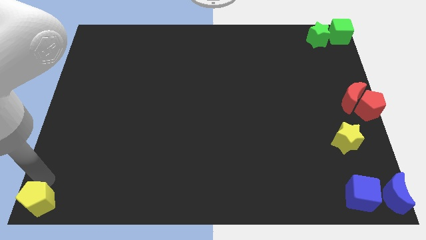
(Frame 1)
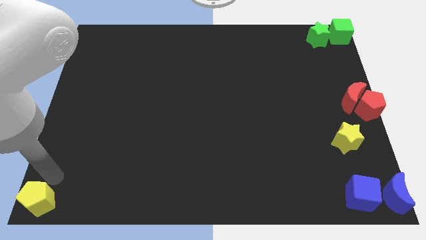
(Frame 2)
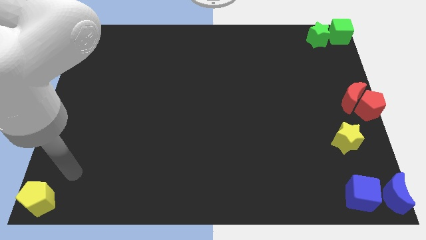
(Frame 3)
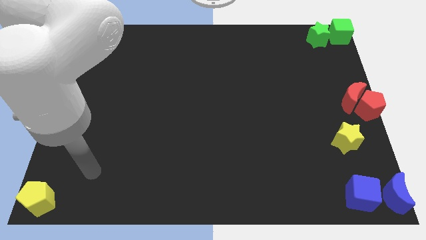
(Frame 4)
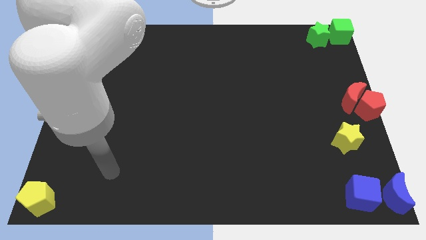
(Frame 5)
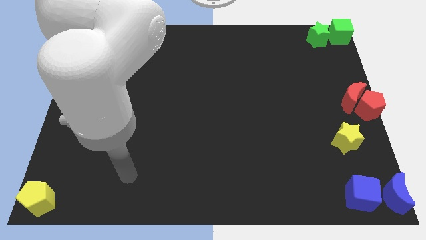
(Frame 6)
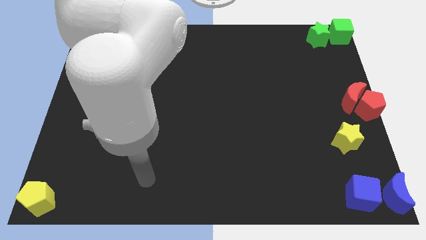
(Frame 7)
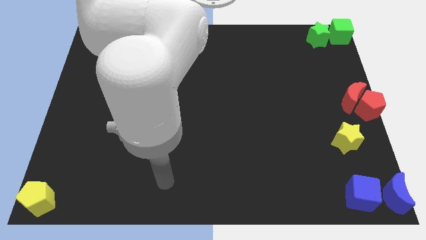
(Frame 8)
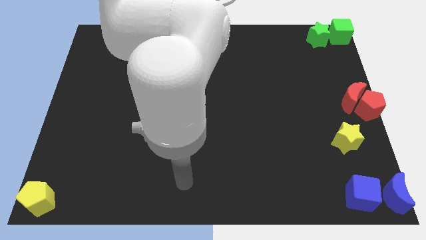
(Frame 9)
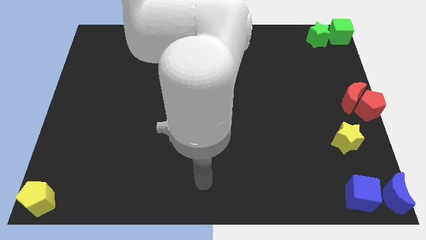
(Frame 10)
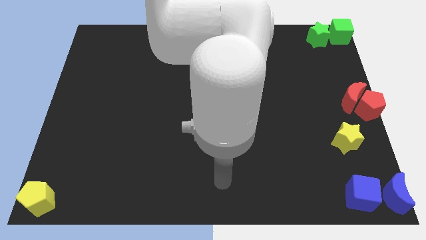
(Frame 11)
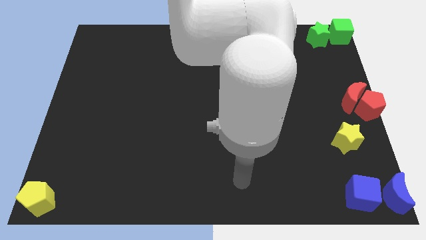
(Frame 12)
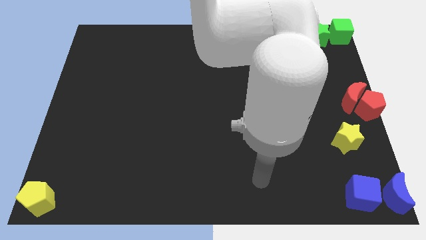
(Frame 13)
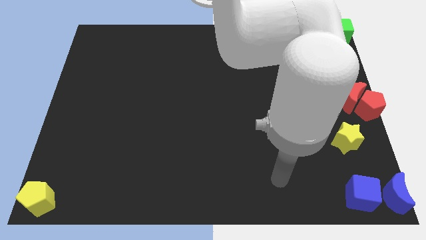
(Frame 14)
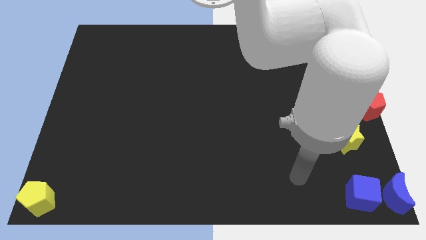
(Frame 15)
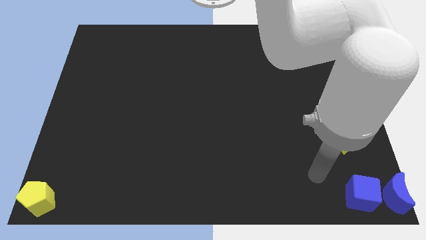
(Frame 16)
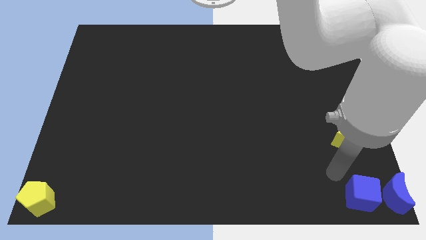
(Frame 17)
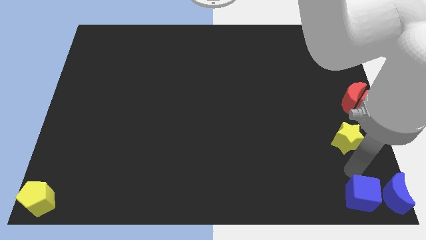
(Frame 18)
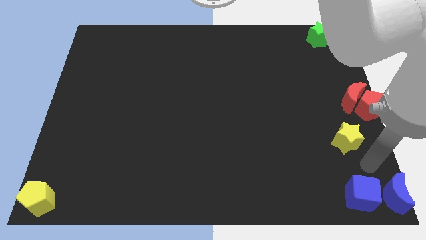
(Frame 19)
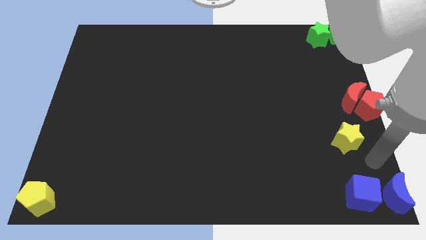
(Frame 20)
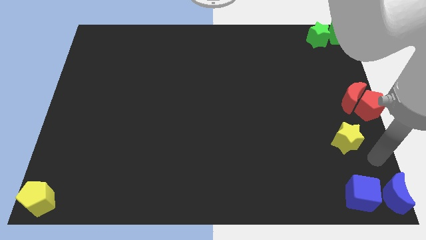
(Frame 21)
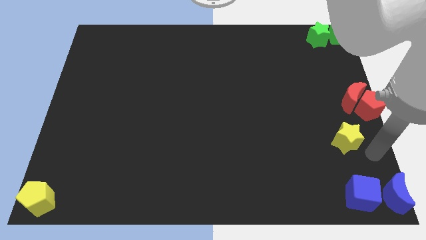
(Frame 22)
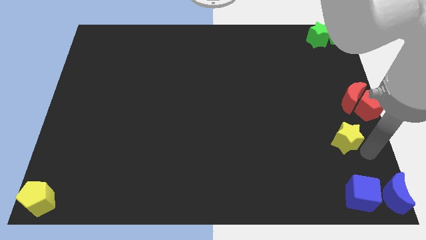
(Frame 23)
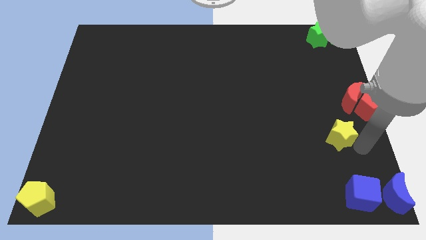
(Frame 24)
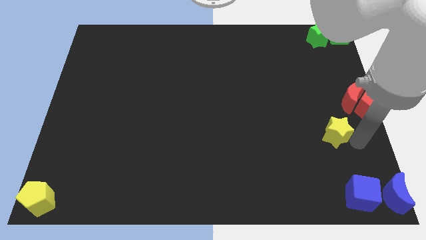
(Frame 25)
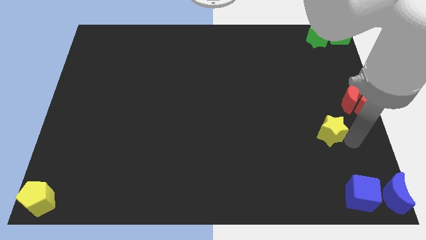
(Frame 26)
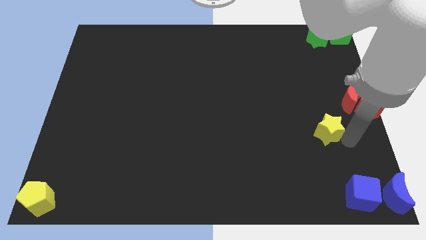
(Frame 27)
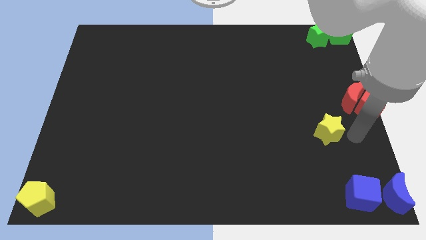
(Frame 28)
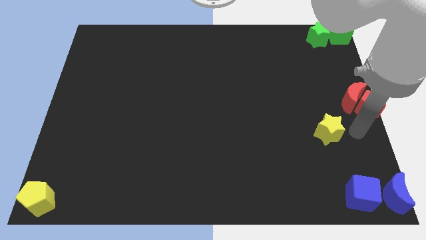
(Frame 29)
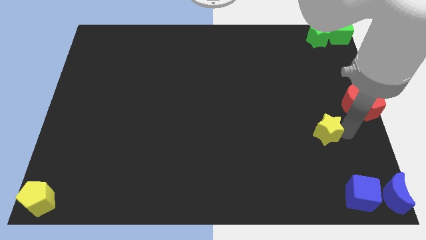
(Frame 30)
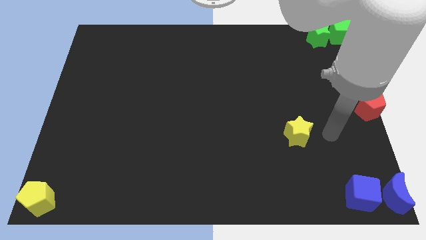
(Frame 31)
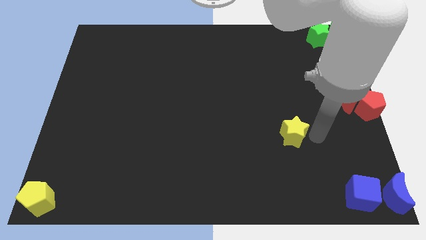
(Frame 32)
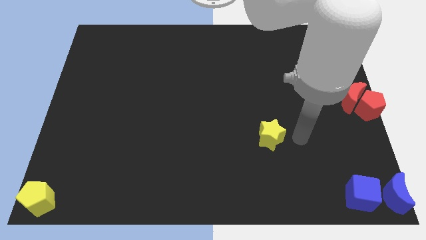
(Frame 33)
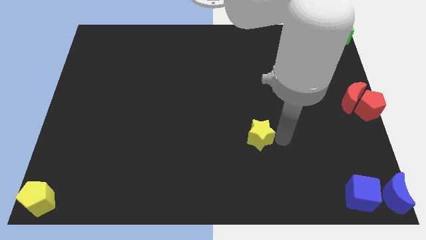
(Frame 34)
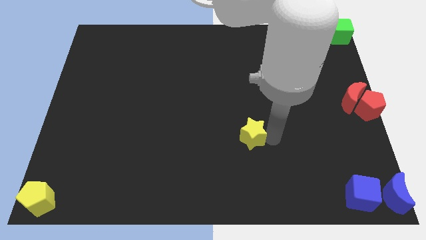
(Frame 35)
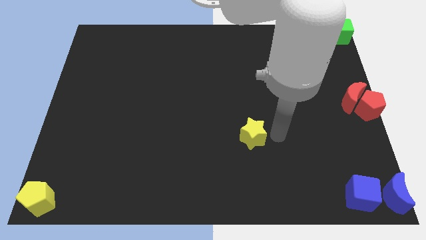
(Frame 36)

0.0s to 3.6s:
piush the yellow star towards the left side of the board

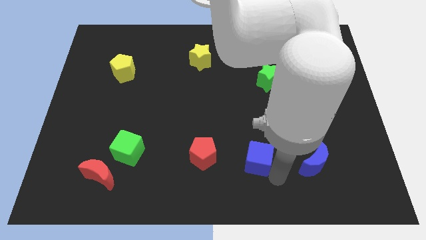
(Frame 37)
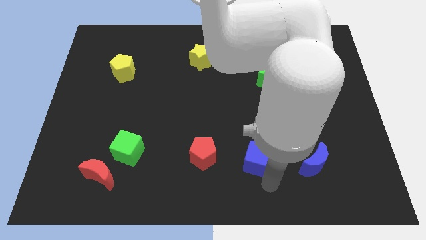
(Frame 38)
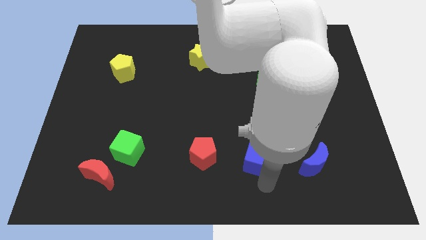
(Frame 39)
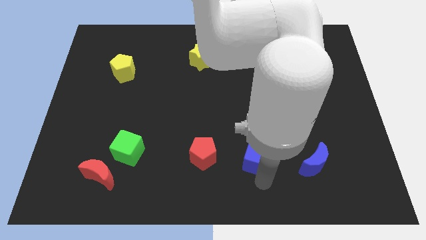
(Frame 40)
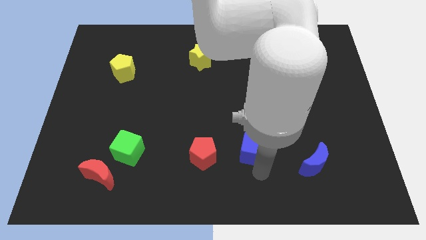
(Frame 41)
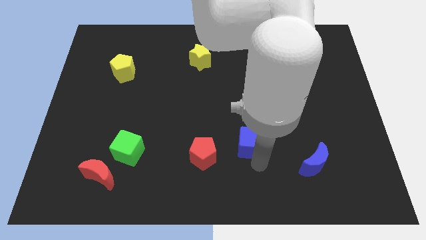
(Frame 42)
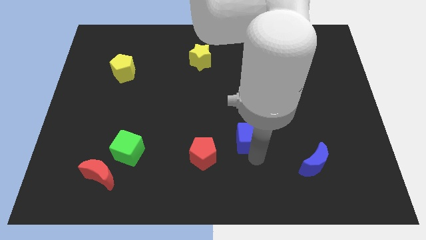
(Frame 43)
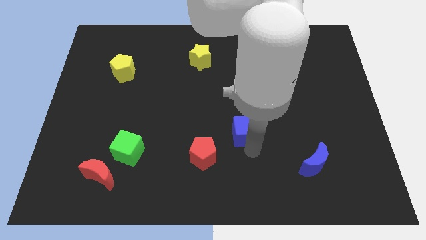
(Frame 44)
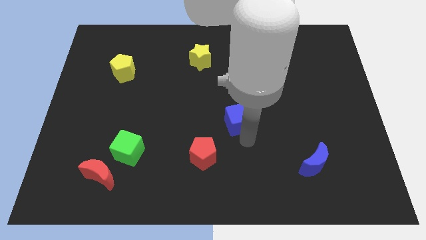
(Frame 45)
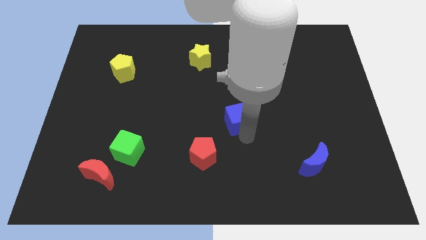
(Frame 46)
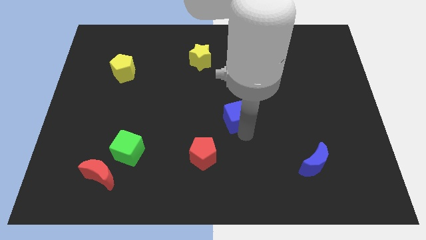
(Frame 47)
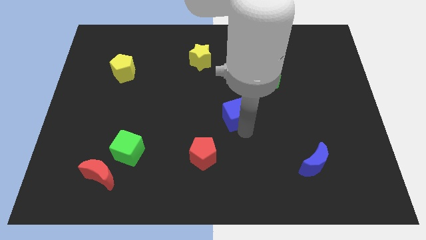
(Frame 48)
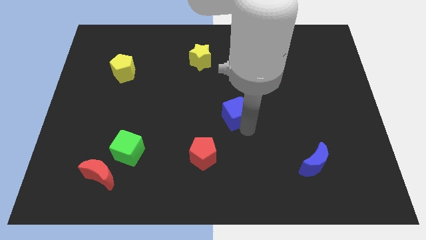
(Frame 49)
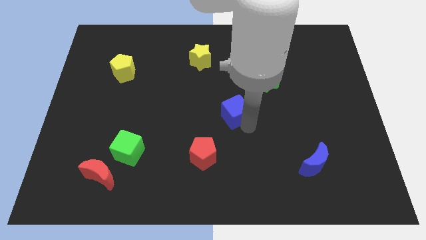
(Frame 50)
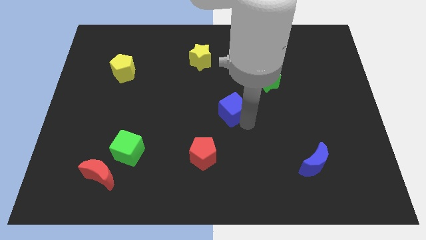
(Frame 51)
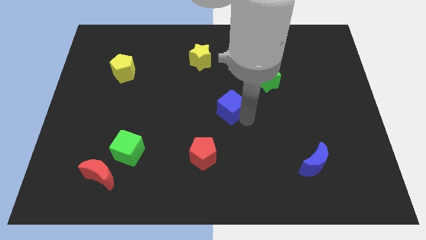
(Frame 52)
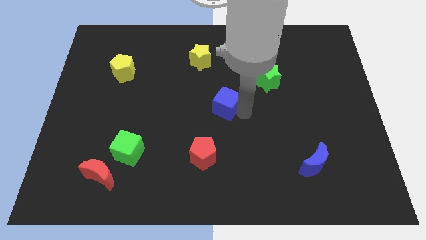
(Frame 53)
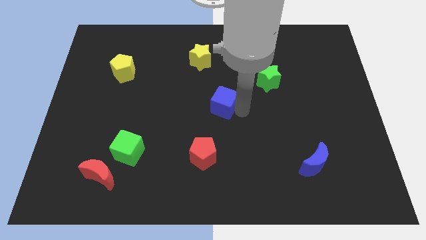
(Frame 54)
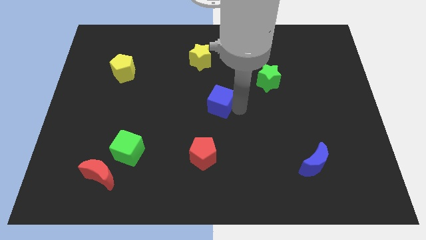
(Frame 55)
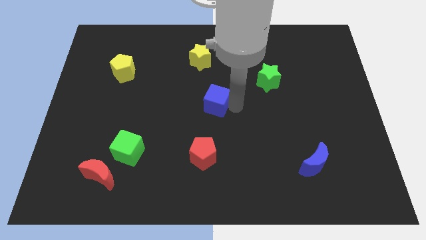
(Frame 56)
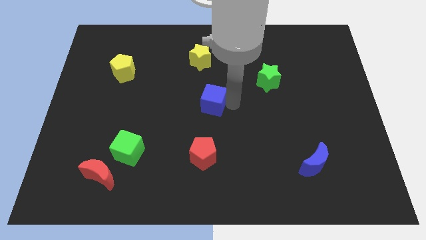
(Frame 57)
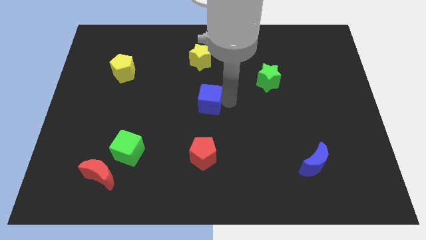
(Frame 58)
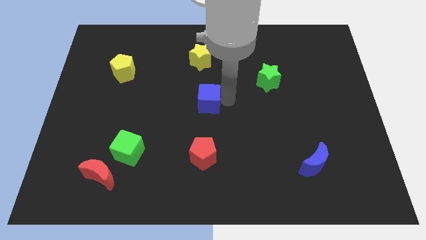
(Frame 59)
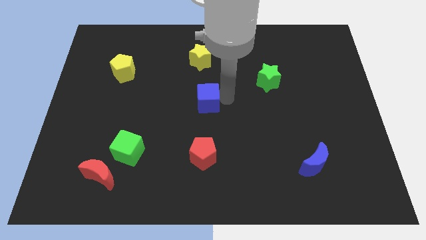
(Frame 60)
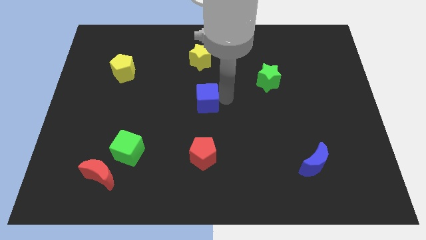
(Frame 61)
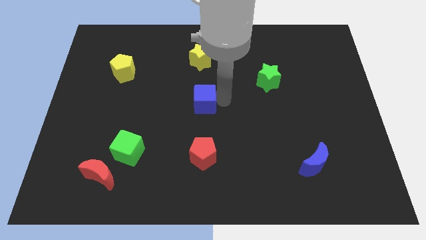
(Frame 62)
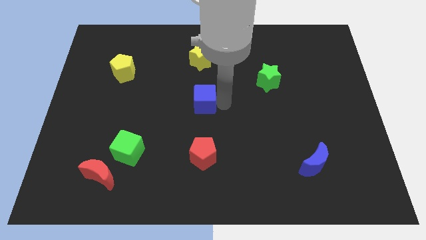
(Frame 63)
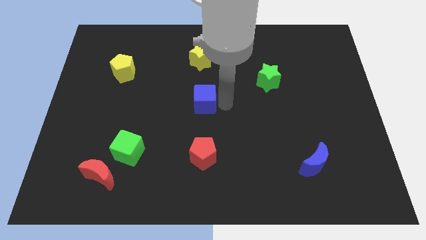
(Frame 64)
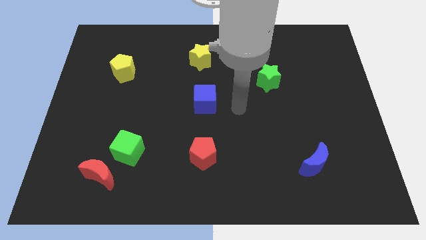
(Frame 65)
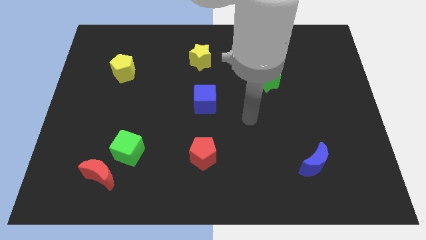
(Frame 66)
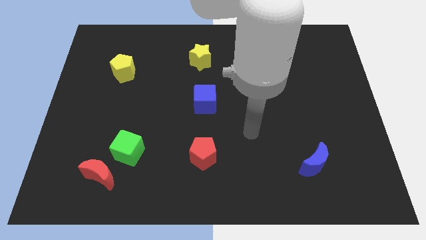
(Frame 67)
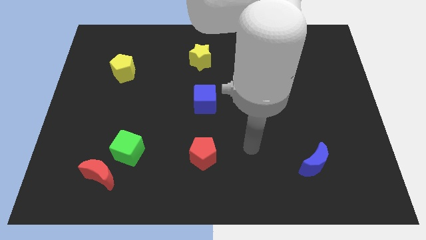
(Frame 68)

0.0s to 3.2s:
move the blue cube to the center on the board

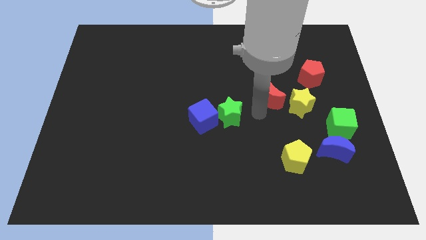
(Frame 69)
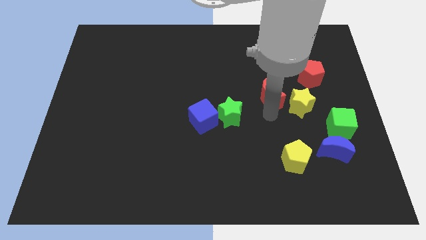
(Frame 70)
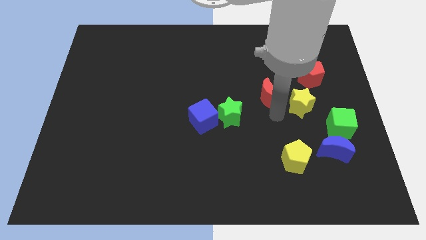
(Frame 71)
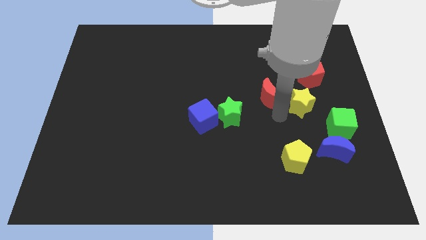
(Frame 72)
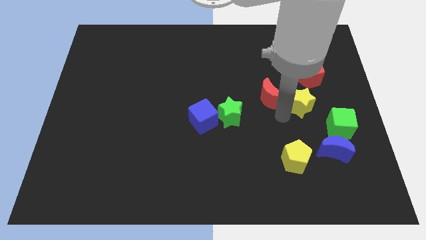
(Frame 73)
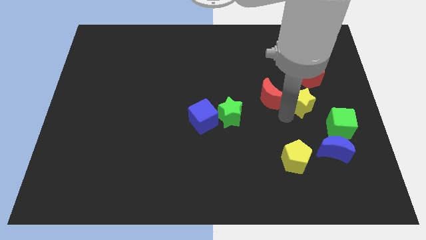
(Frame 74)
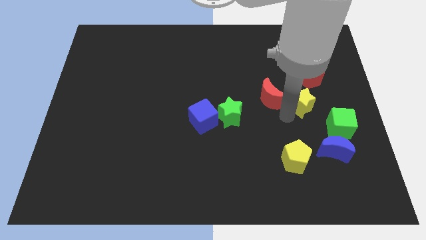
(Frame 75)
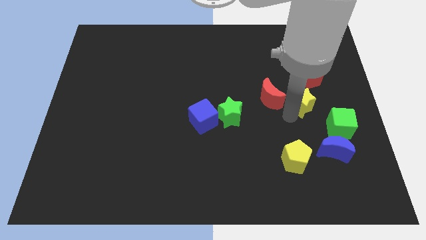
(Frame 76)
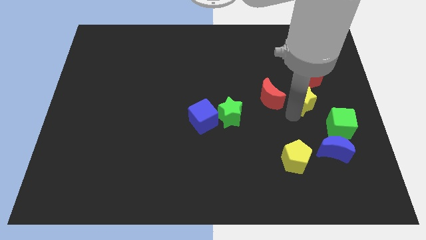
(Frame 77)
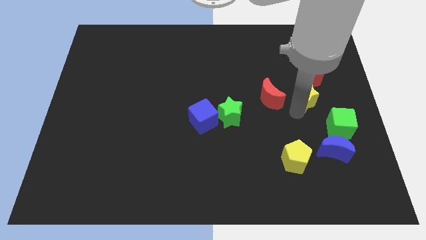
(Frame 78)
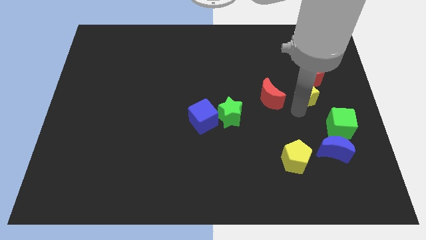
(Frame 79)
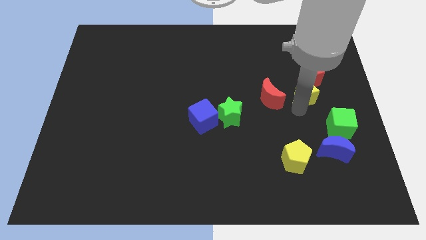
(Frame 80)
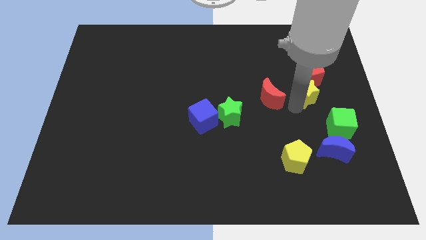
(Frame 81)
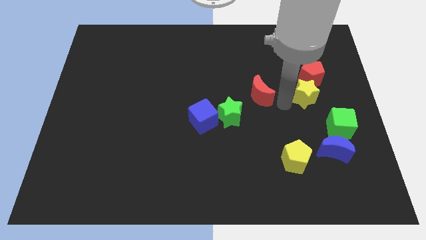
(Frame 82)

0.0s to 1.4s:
push the yellow star into the red pentagon

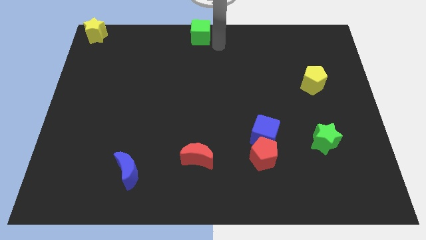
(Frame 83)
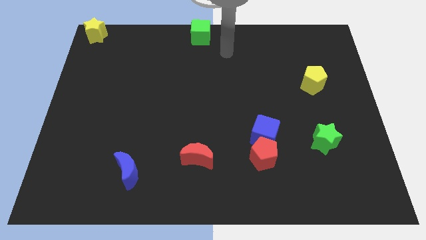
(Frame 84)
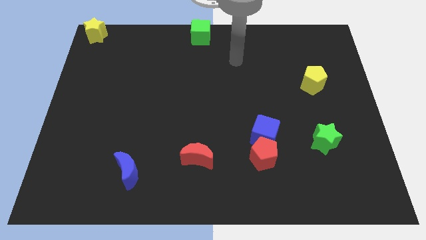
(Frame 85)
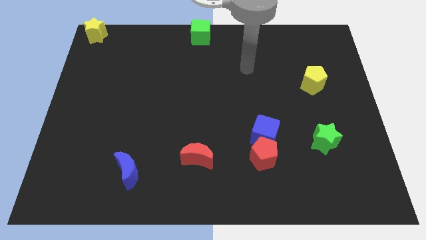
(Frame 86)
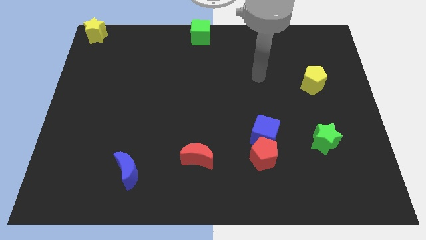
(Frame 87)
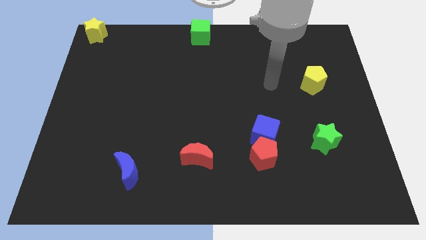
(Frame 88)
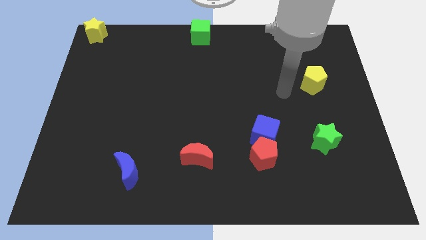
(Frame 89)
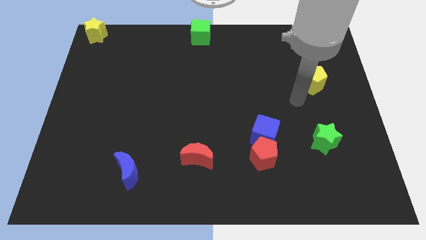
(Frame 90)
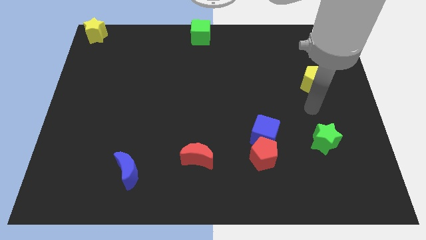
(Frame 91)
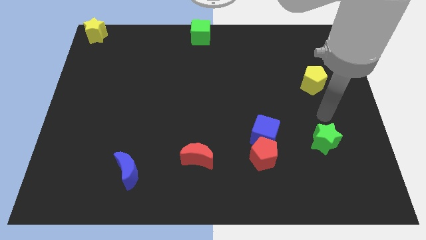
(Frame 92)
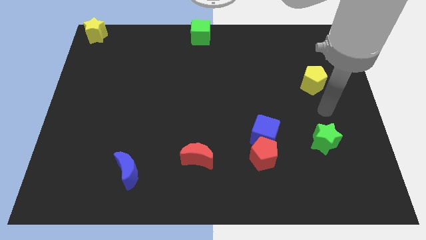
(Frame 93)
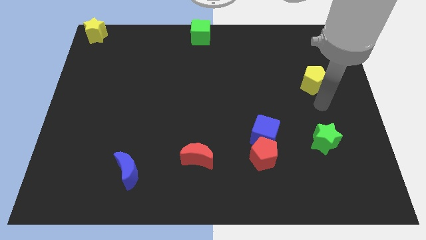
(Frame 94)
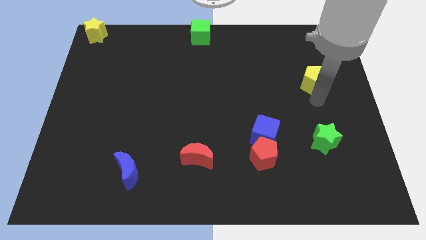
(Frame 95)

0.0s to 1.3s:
place the arm away from the green cube
